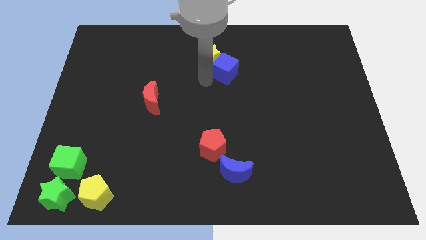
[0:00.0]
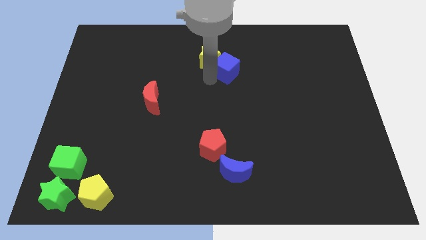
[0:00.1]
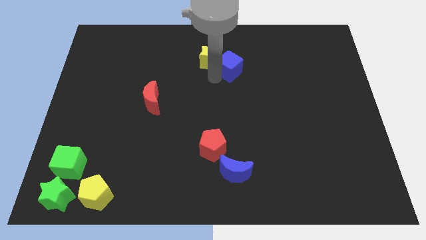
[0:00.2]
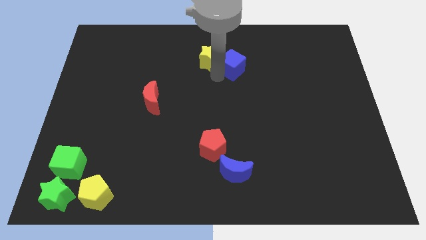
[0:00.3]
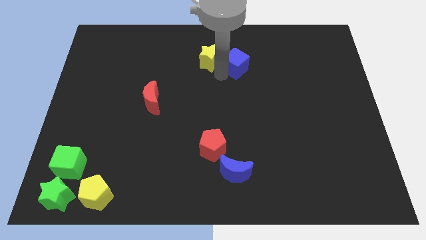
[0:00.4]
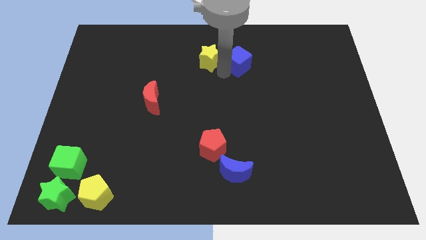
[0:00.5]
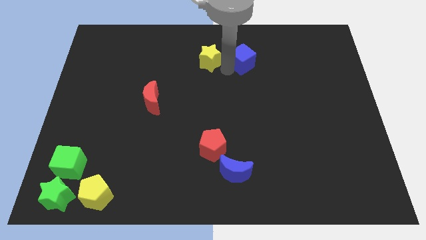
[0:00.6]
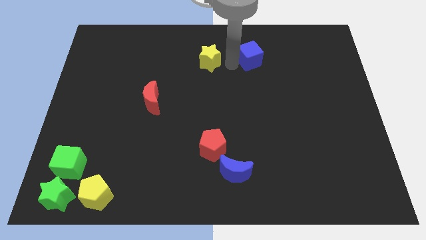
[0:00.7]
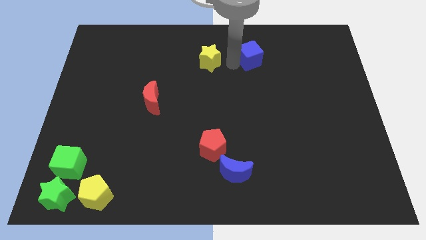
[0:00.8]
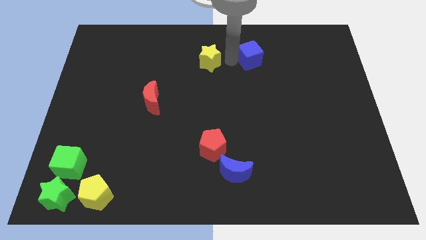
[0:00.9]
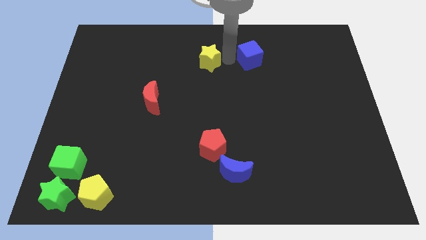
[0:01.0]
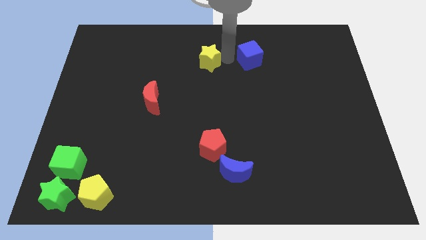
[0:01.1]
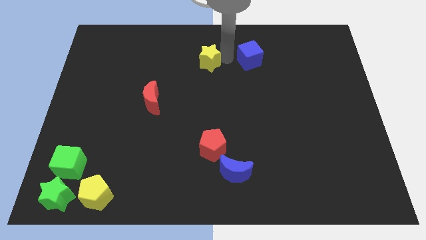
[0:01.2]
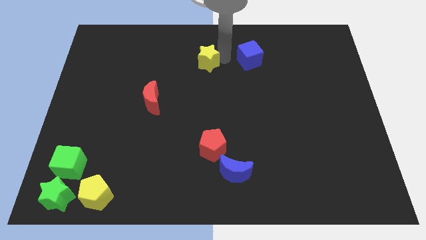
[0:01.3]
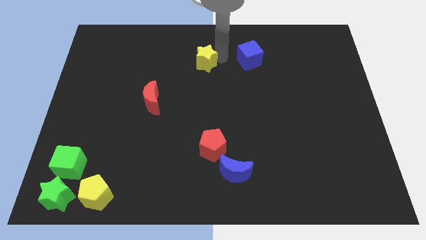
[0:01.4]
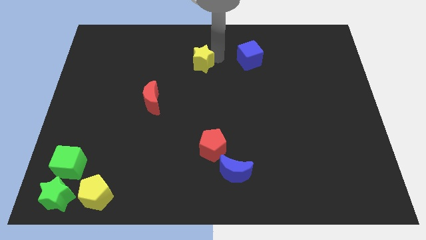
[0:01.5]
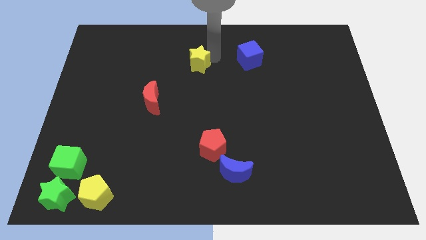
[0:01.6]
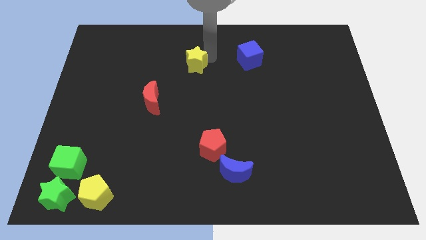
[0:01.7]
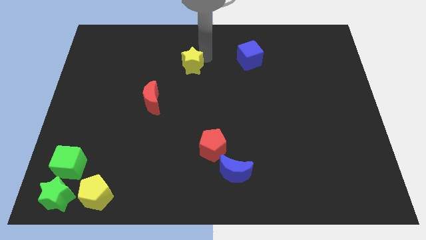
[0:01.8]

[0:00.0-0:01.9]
separate the blue cube and yellow star

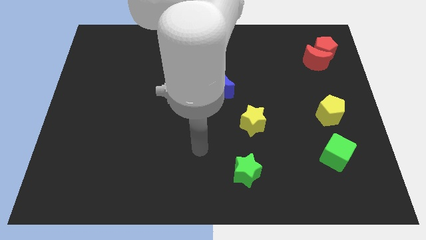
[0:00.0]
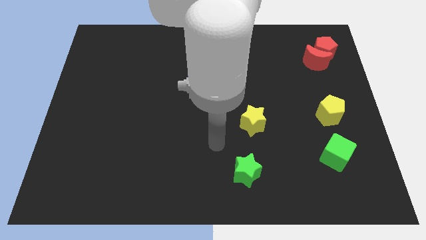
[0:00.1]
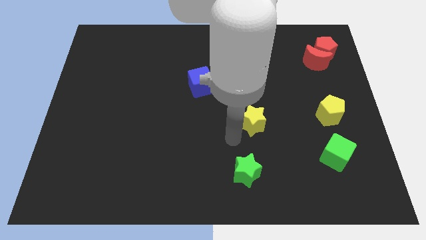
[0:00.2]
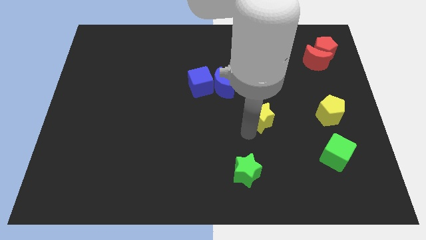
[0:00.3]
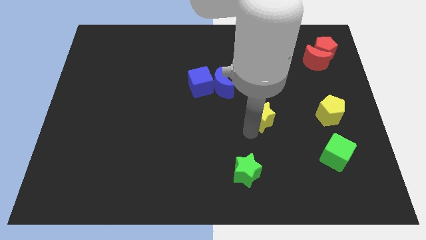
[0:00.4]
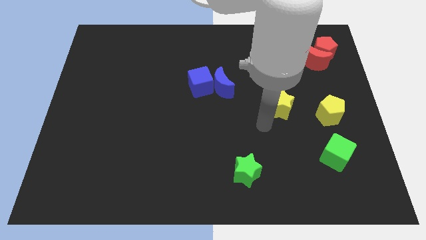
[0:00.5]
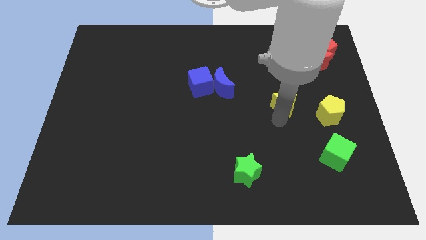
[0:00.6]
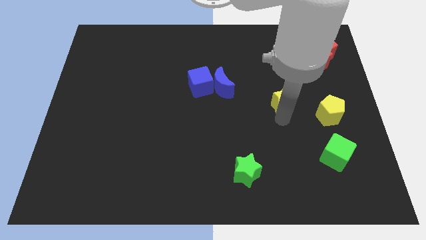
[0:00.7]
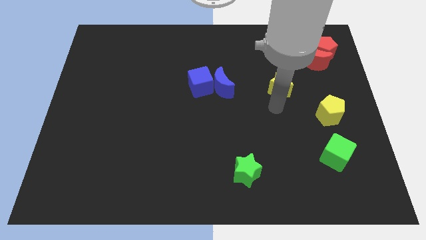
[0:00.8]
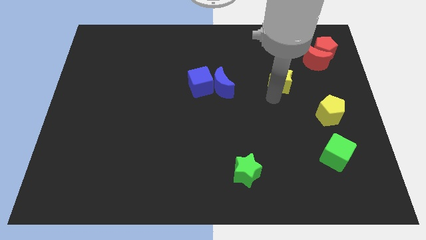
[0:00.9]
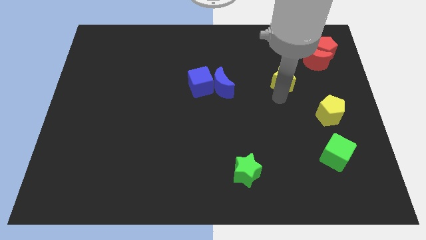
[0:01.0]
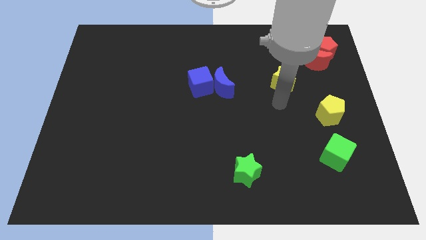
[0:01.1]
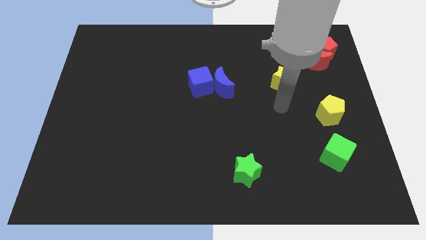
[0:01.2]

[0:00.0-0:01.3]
place the yellow star at the right side of the group of blue blocks

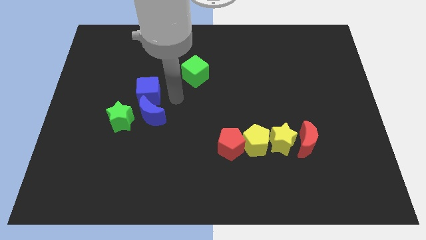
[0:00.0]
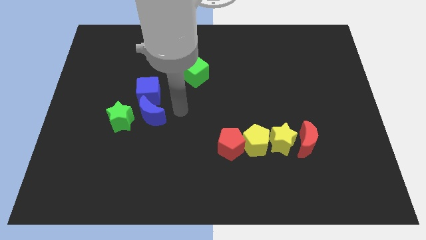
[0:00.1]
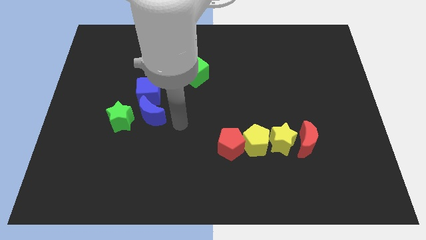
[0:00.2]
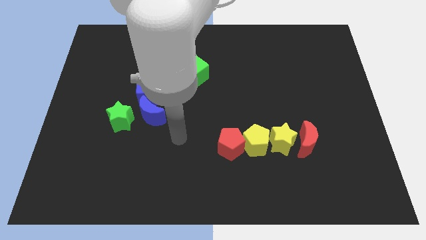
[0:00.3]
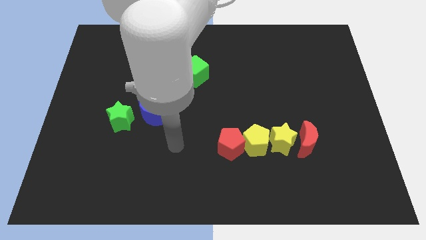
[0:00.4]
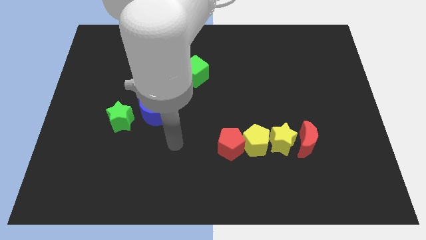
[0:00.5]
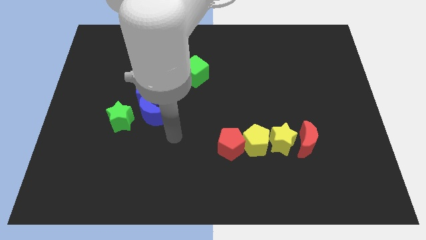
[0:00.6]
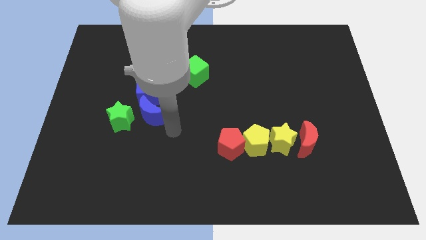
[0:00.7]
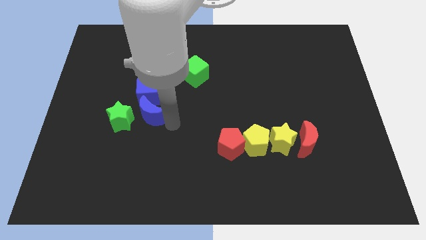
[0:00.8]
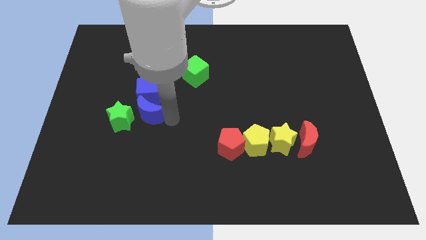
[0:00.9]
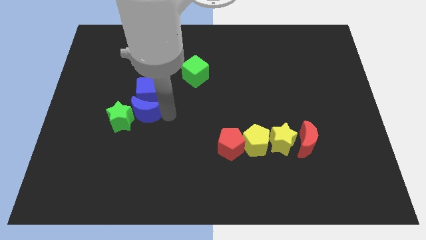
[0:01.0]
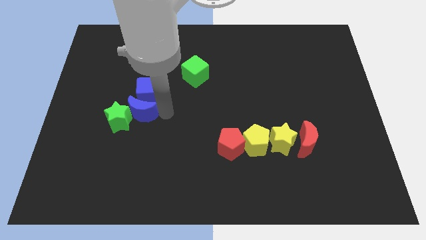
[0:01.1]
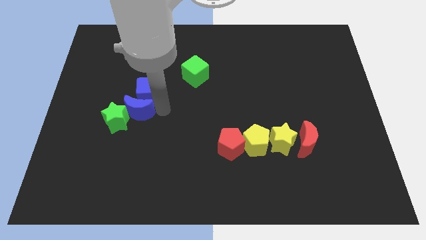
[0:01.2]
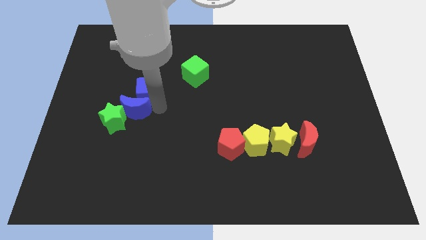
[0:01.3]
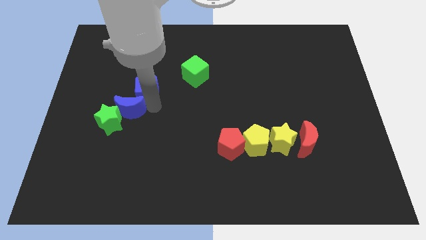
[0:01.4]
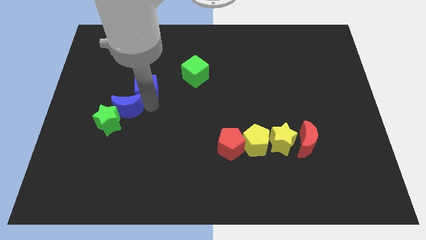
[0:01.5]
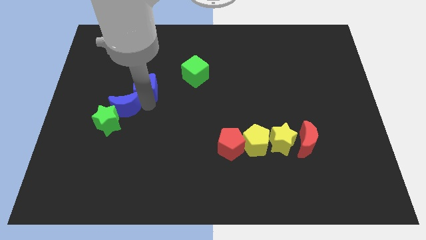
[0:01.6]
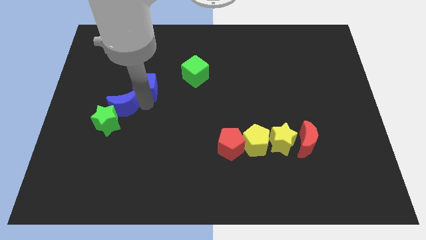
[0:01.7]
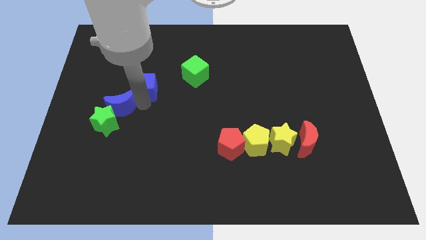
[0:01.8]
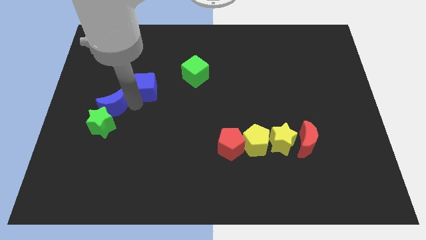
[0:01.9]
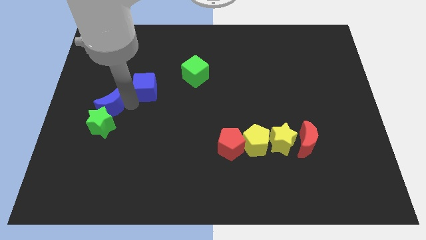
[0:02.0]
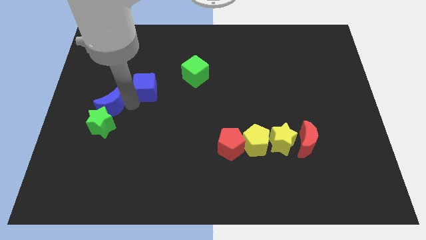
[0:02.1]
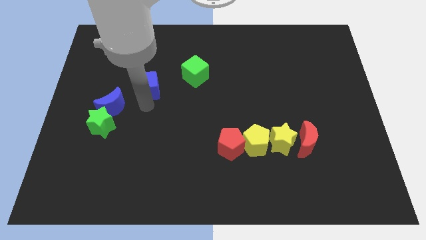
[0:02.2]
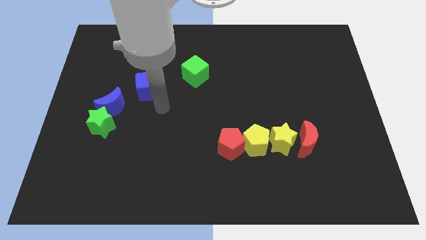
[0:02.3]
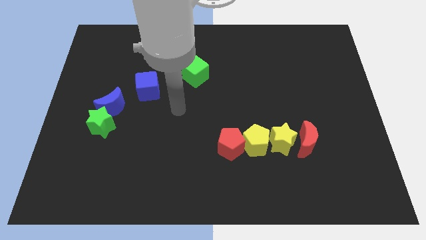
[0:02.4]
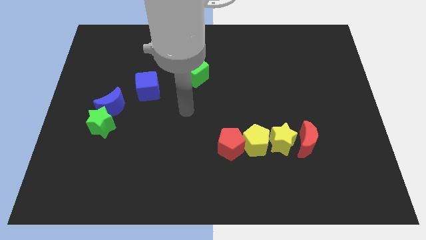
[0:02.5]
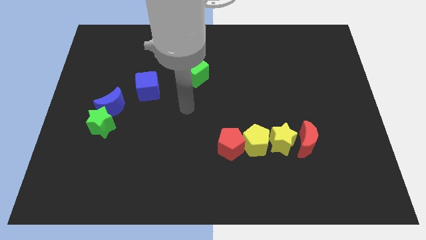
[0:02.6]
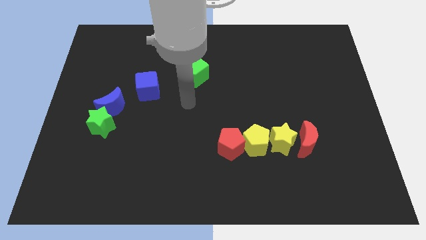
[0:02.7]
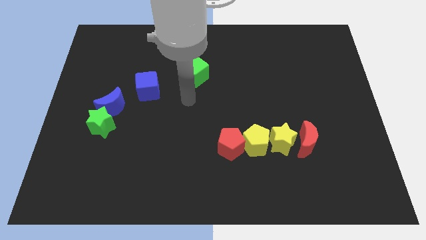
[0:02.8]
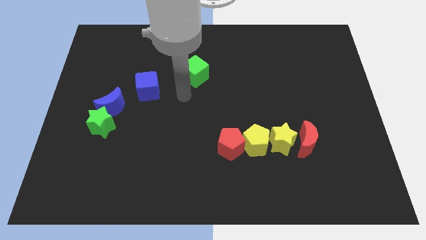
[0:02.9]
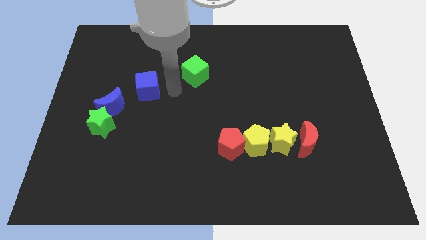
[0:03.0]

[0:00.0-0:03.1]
place the blue moon above the green star

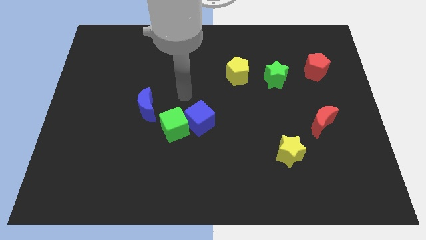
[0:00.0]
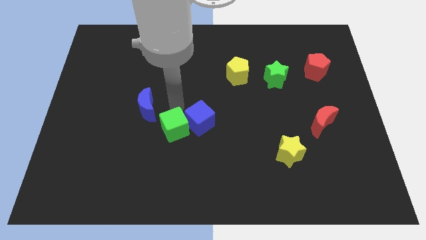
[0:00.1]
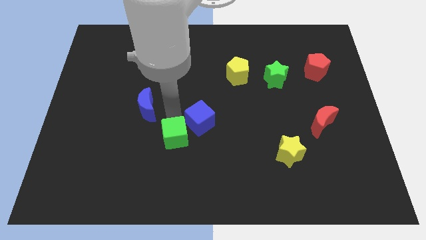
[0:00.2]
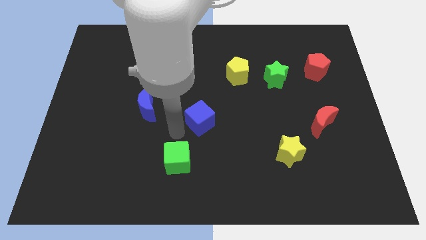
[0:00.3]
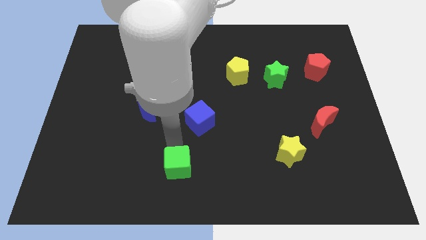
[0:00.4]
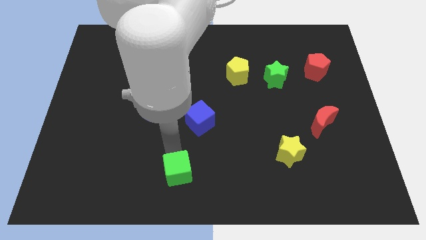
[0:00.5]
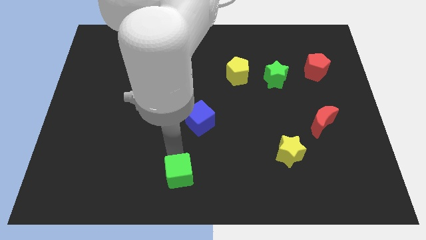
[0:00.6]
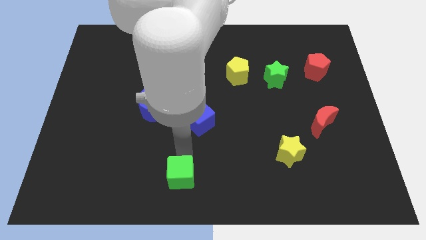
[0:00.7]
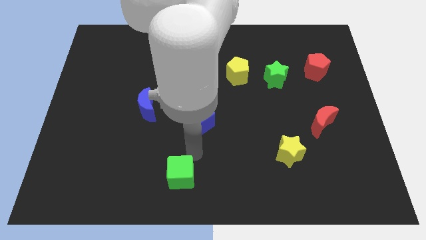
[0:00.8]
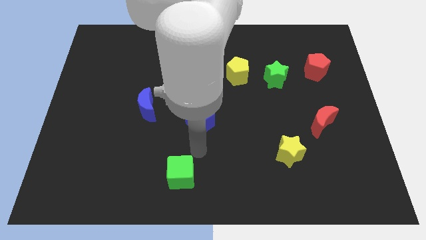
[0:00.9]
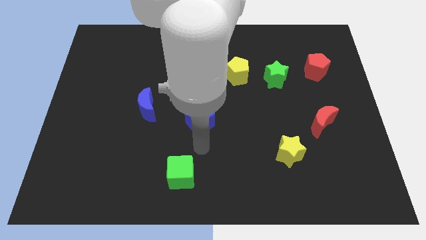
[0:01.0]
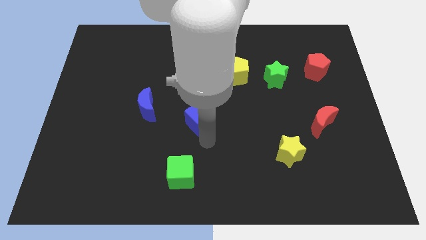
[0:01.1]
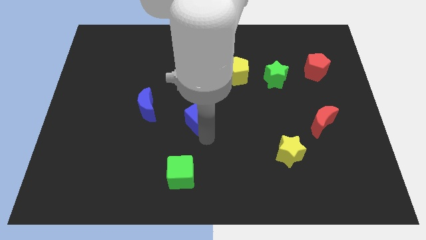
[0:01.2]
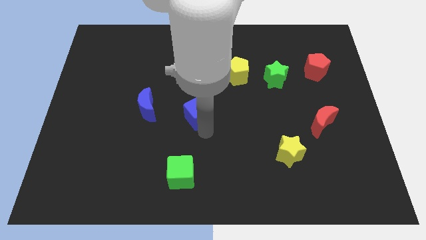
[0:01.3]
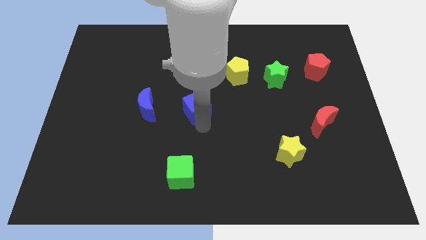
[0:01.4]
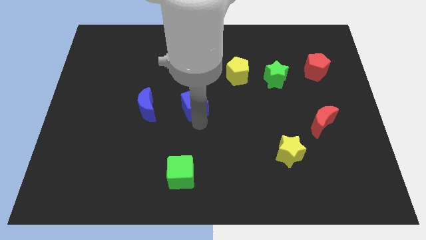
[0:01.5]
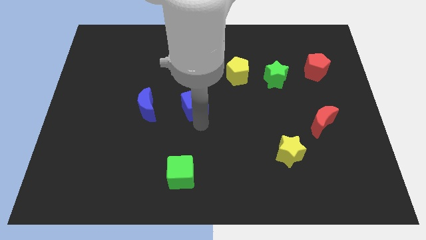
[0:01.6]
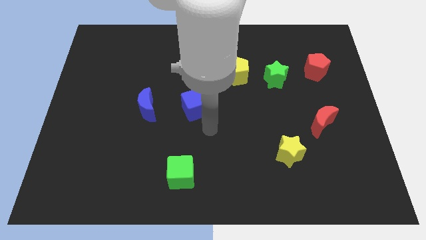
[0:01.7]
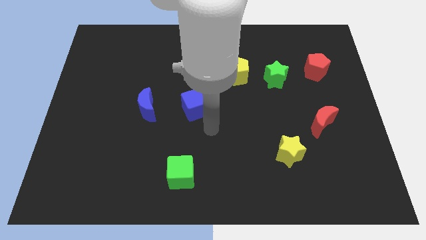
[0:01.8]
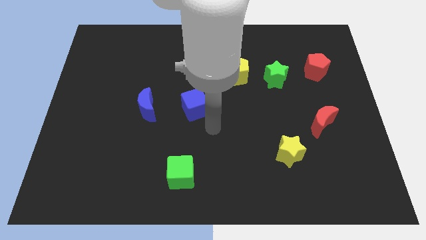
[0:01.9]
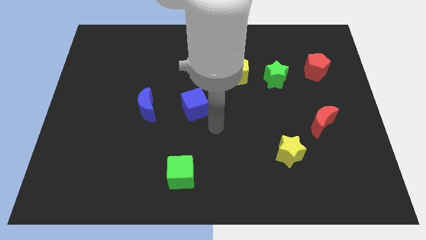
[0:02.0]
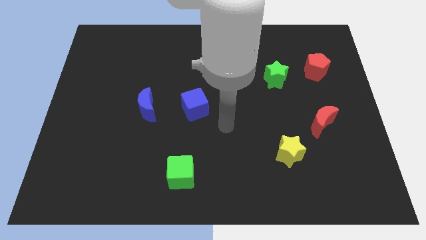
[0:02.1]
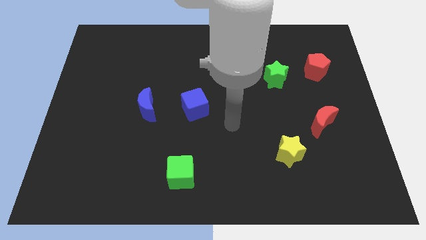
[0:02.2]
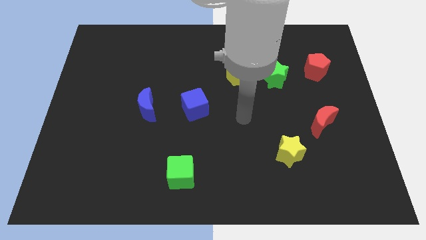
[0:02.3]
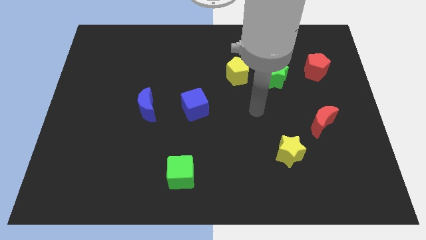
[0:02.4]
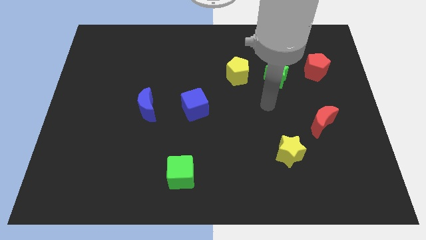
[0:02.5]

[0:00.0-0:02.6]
separate the green cube and the blue cube from each other

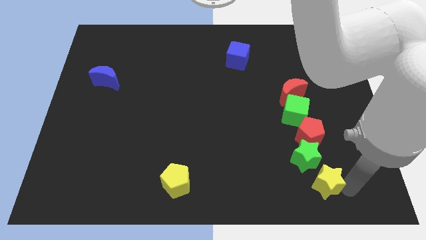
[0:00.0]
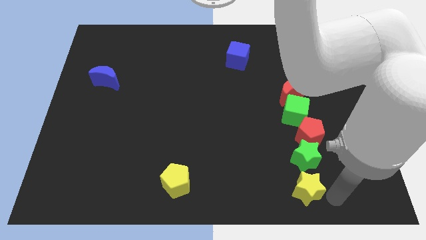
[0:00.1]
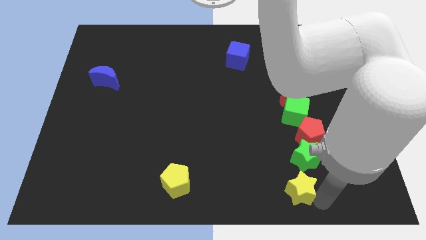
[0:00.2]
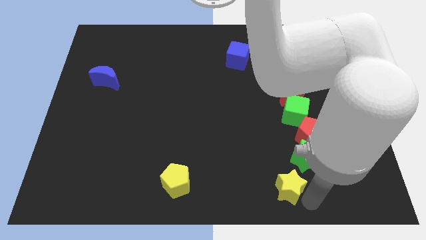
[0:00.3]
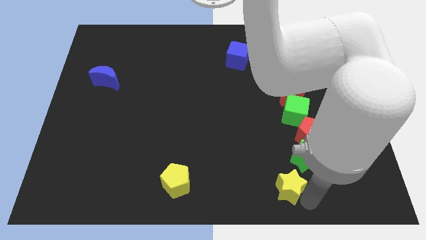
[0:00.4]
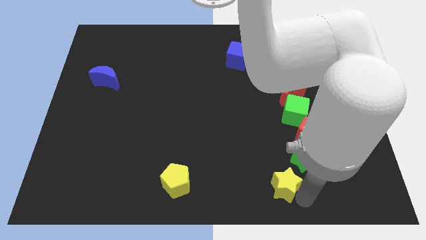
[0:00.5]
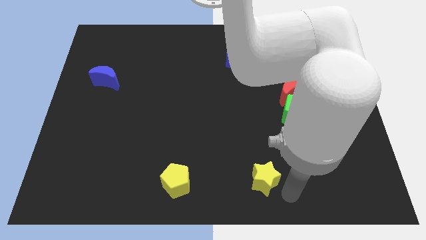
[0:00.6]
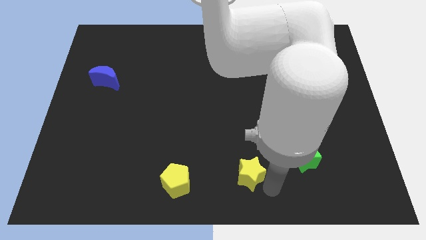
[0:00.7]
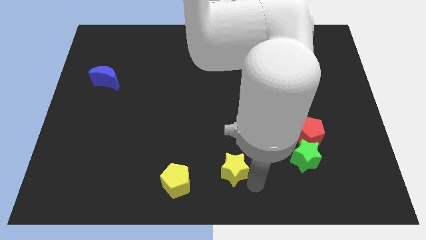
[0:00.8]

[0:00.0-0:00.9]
place yellow star between yellow pentagon and green star
